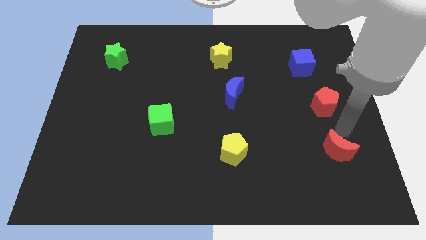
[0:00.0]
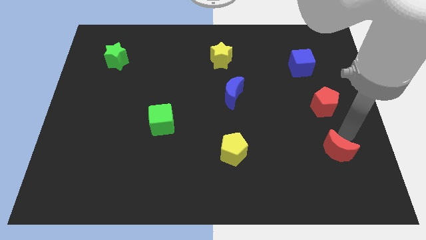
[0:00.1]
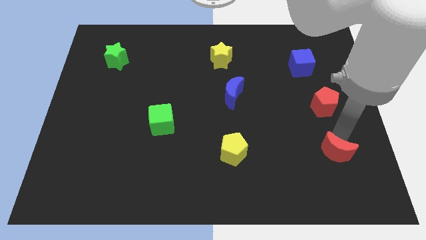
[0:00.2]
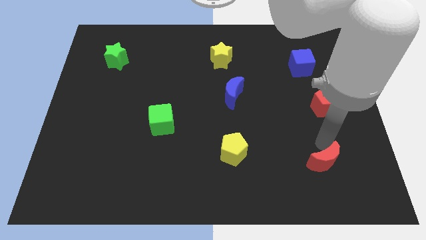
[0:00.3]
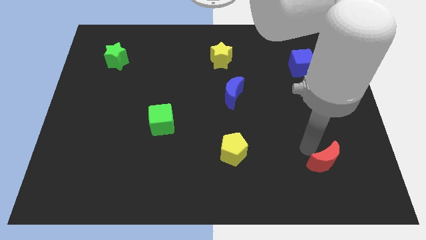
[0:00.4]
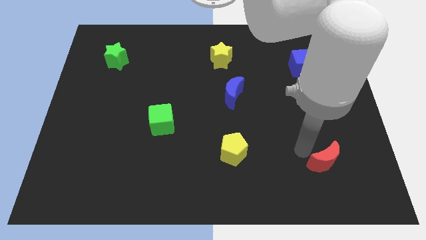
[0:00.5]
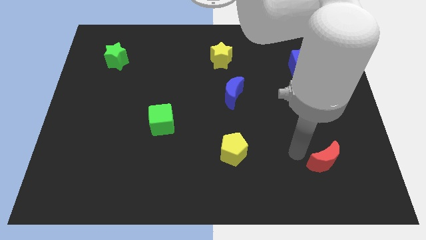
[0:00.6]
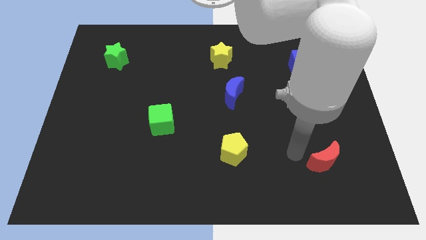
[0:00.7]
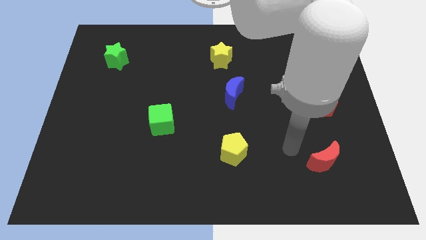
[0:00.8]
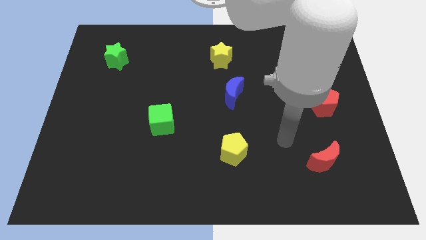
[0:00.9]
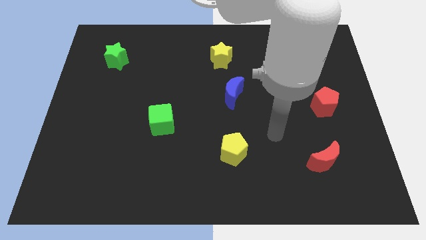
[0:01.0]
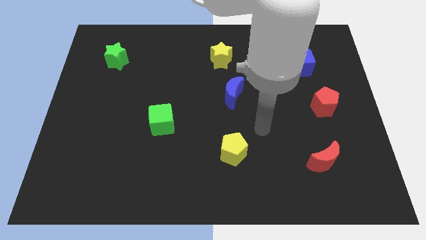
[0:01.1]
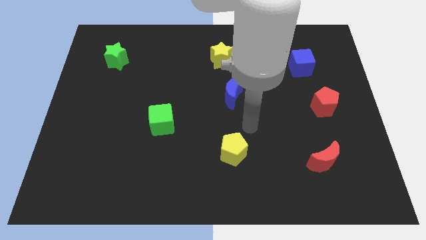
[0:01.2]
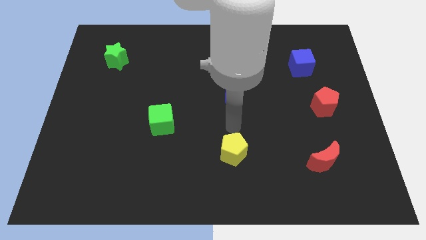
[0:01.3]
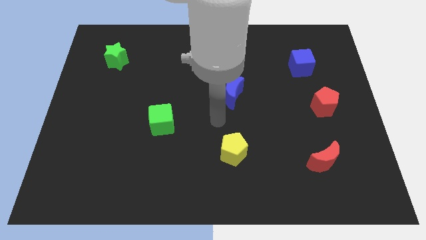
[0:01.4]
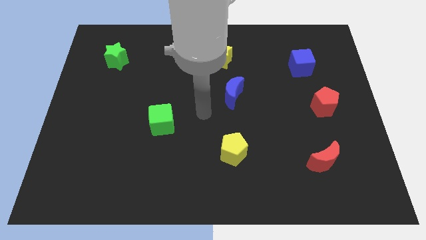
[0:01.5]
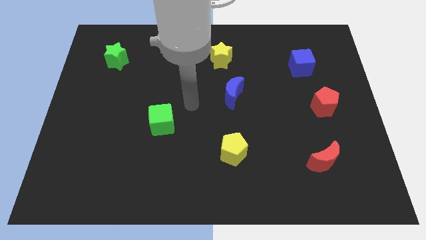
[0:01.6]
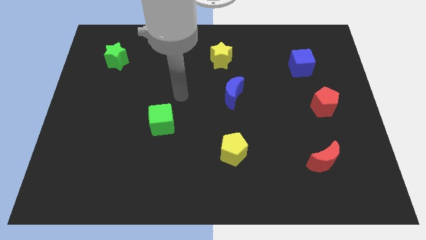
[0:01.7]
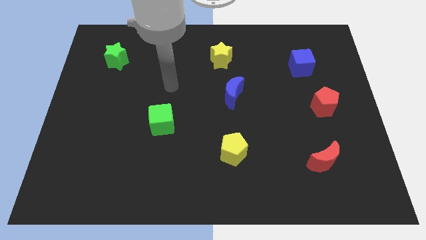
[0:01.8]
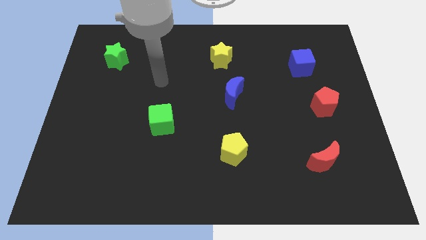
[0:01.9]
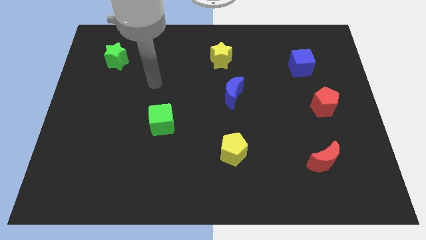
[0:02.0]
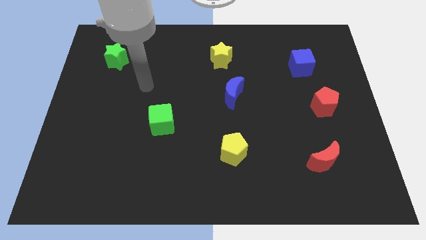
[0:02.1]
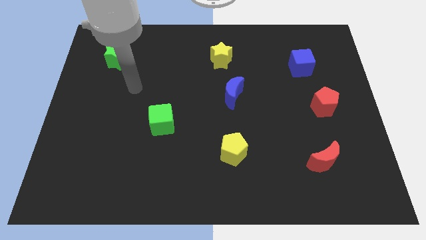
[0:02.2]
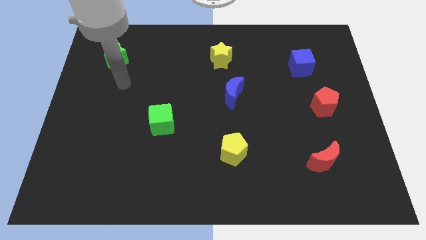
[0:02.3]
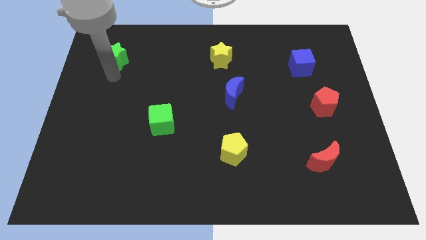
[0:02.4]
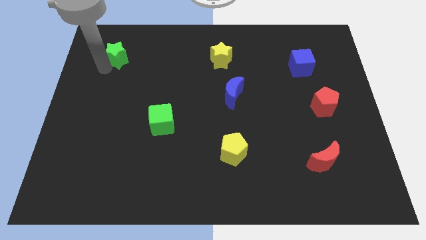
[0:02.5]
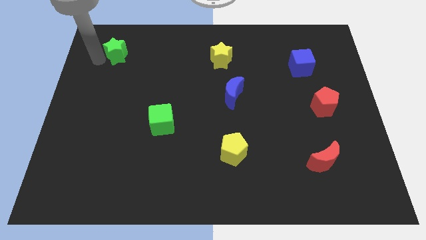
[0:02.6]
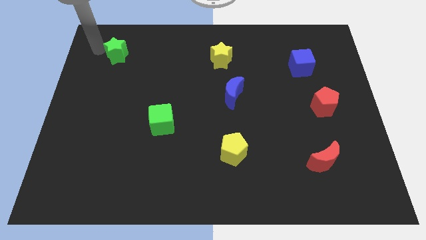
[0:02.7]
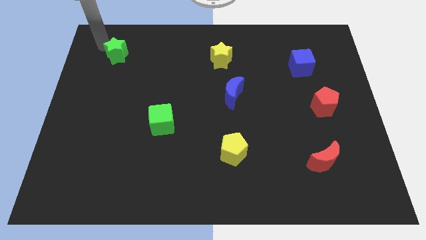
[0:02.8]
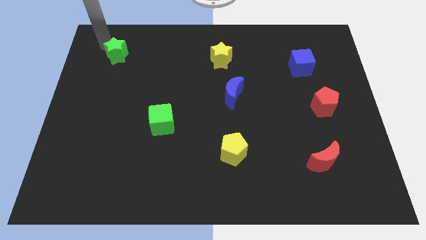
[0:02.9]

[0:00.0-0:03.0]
move your arm away from the red moon

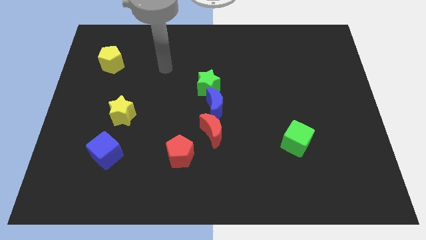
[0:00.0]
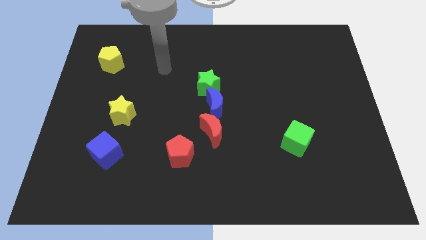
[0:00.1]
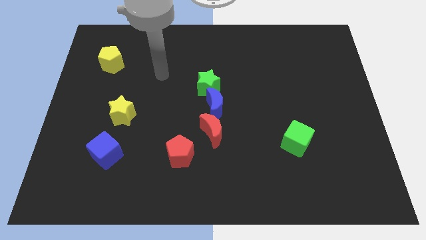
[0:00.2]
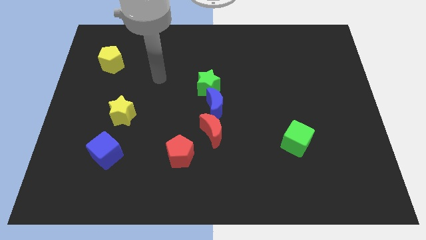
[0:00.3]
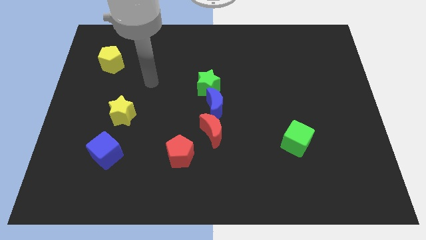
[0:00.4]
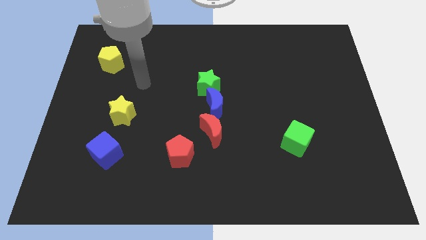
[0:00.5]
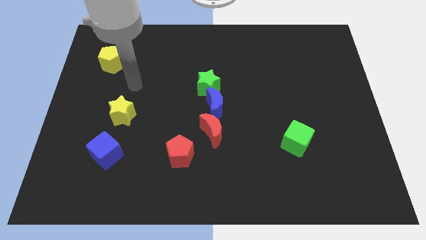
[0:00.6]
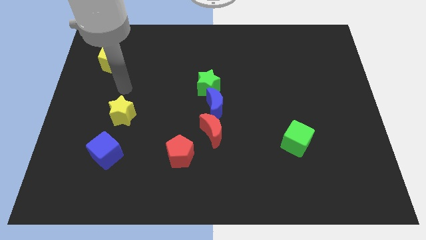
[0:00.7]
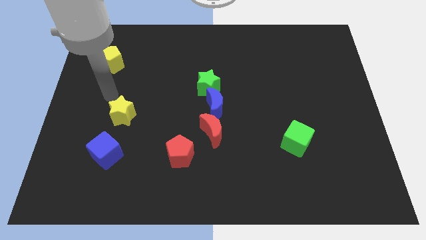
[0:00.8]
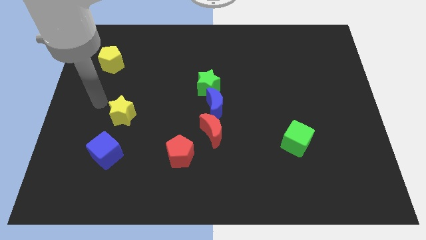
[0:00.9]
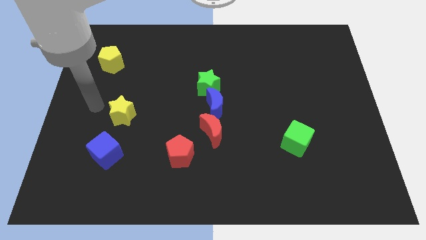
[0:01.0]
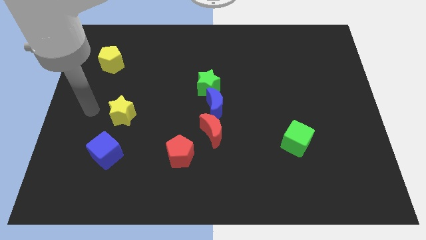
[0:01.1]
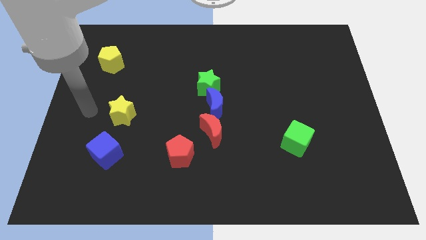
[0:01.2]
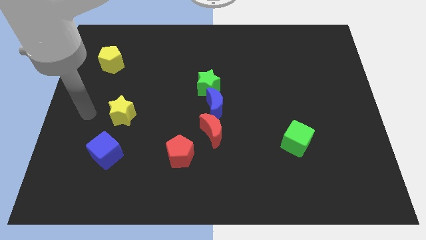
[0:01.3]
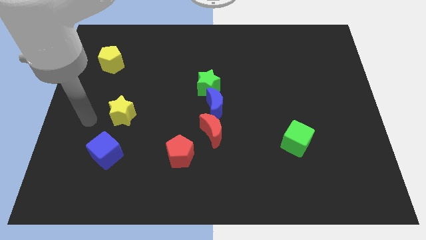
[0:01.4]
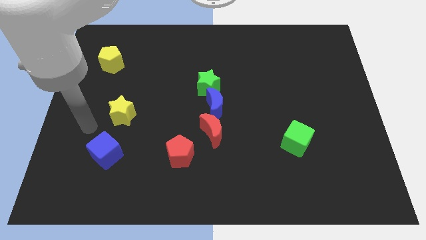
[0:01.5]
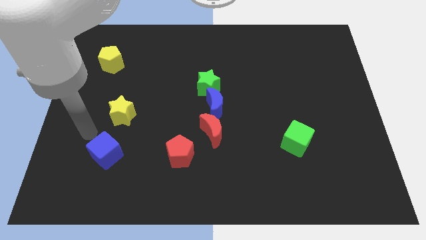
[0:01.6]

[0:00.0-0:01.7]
move arm to the left of blue cube

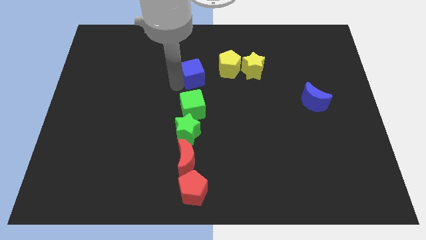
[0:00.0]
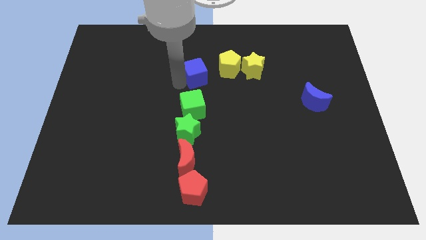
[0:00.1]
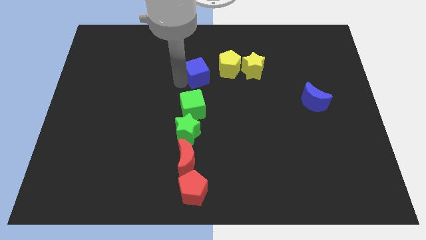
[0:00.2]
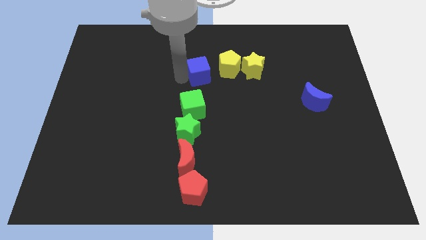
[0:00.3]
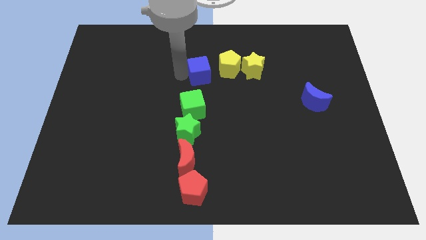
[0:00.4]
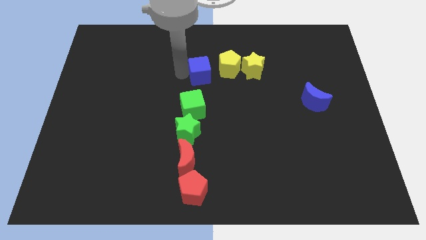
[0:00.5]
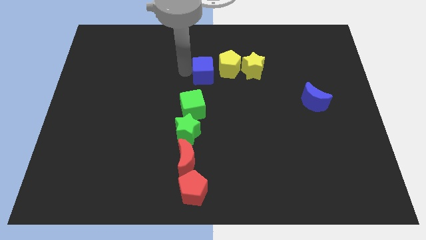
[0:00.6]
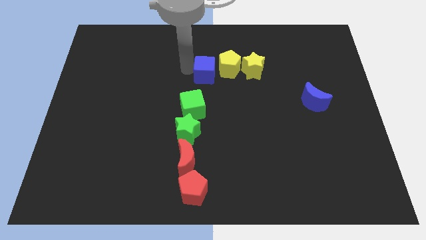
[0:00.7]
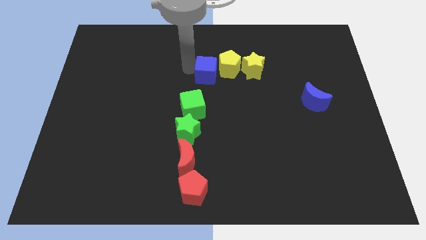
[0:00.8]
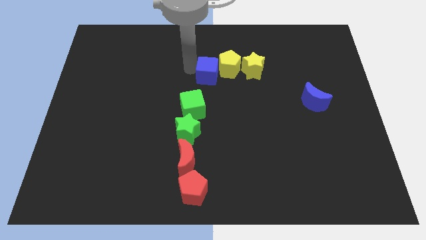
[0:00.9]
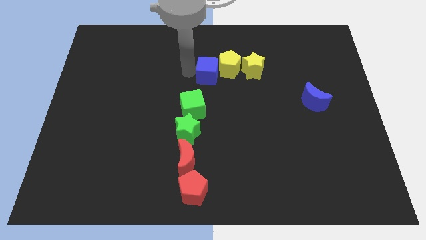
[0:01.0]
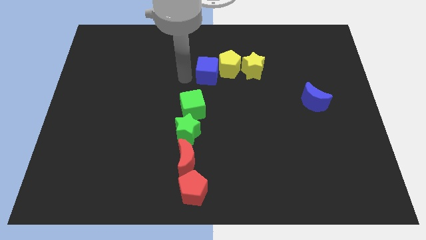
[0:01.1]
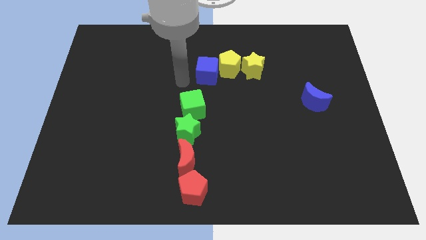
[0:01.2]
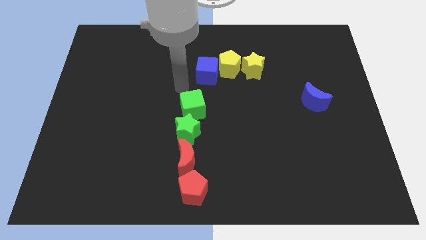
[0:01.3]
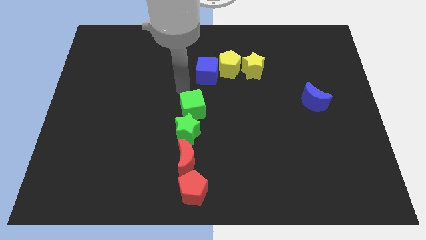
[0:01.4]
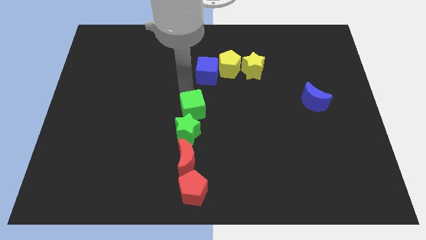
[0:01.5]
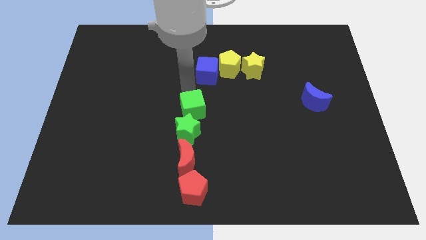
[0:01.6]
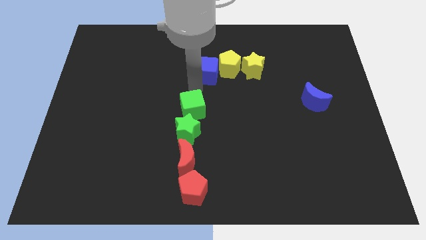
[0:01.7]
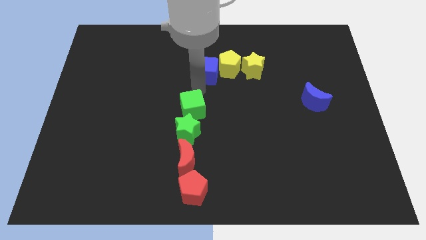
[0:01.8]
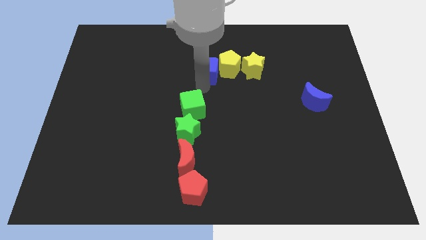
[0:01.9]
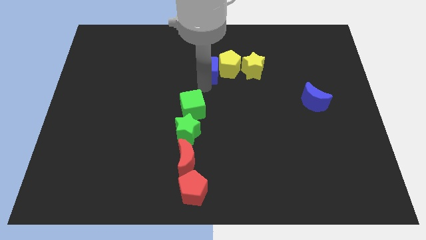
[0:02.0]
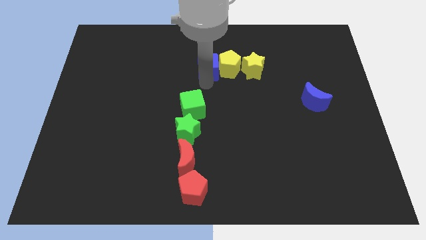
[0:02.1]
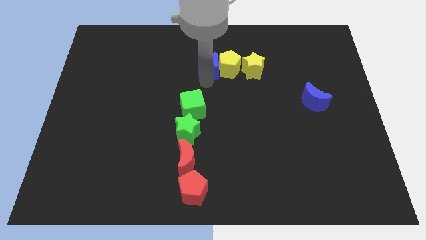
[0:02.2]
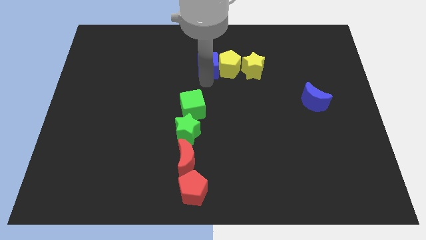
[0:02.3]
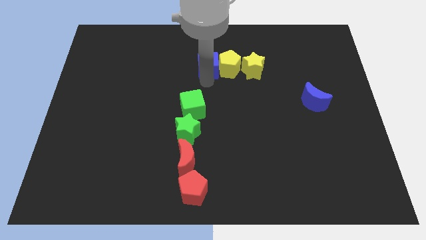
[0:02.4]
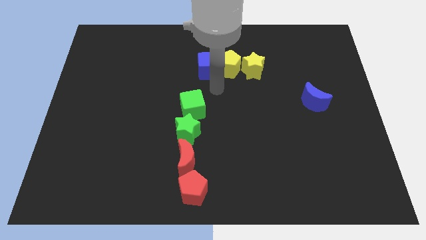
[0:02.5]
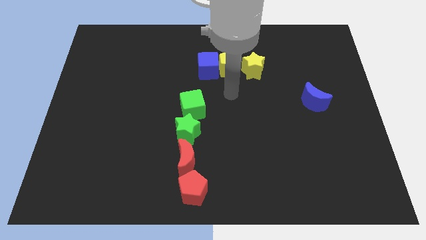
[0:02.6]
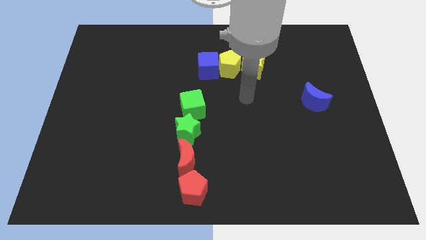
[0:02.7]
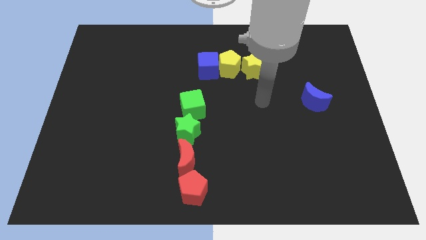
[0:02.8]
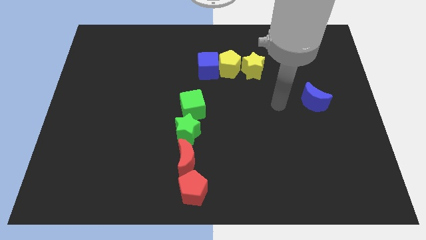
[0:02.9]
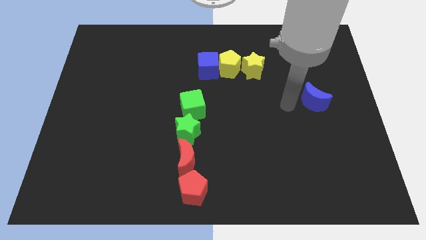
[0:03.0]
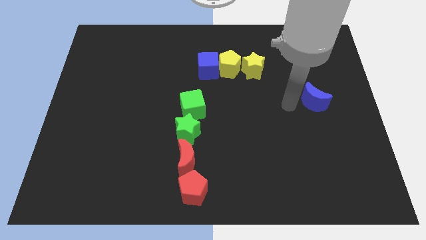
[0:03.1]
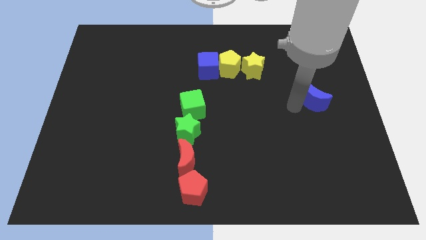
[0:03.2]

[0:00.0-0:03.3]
push the blue cube into the yellow pentagon

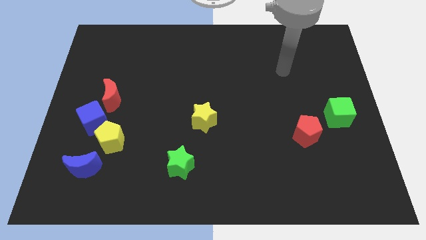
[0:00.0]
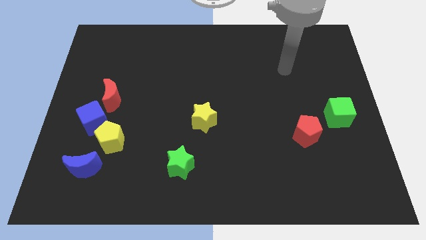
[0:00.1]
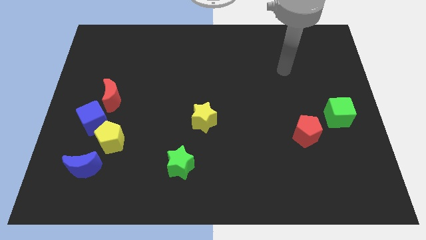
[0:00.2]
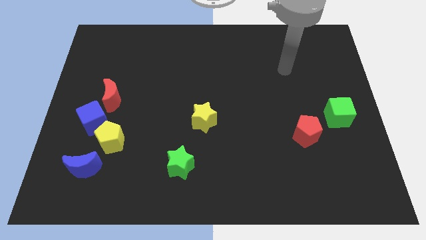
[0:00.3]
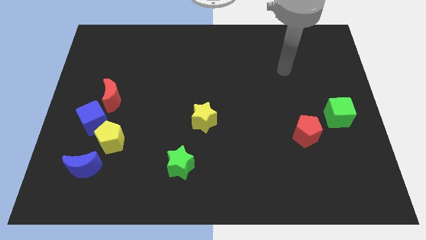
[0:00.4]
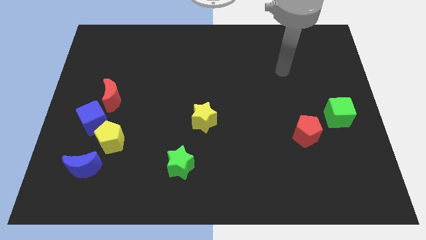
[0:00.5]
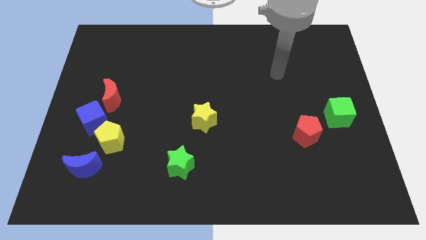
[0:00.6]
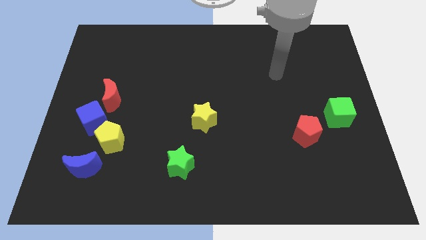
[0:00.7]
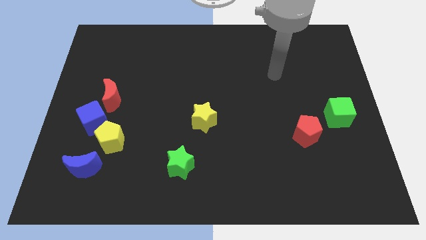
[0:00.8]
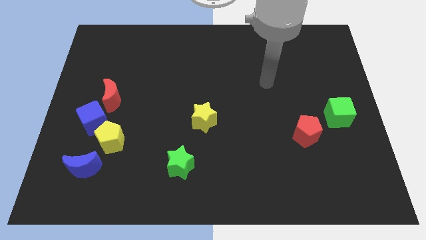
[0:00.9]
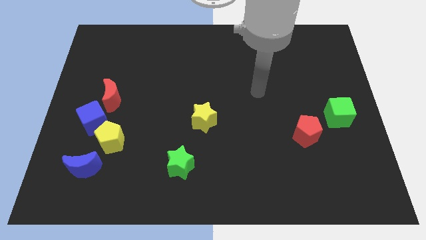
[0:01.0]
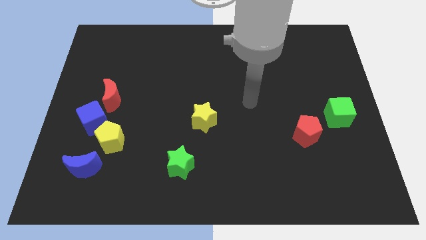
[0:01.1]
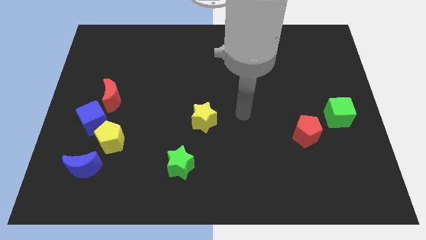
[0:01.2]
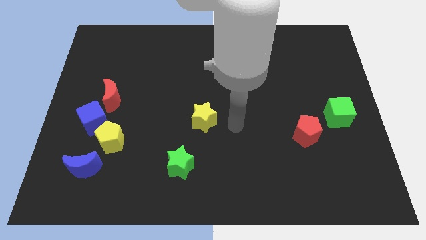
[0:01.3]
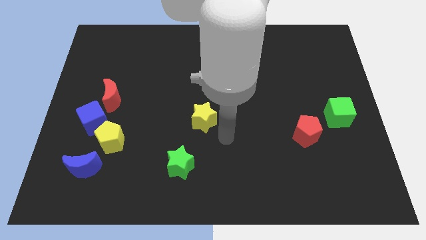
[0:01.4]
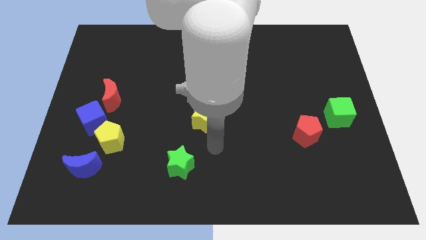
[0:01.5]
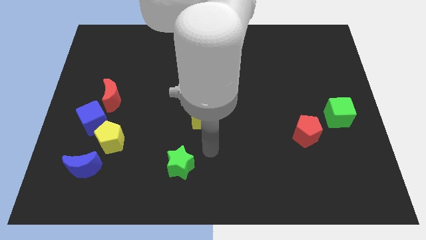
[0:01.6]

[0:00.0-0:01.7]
move your hand towards the bottom of the yellow star
